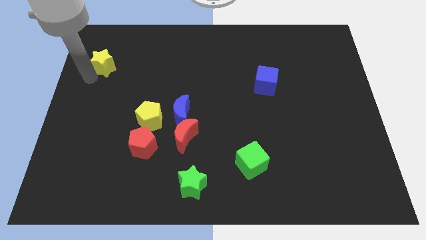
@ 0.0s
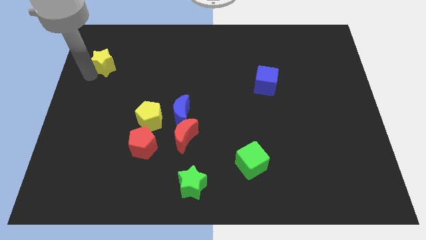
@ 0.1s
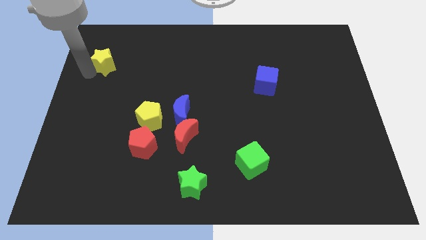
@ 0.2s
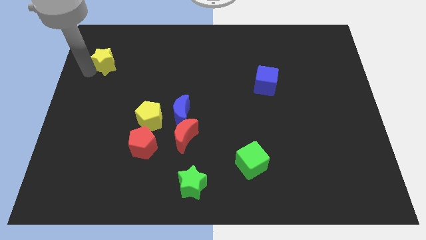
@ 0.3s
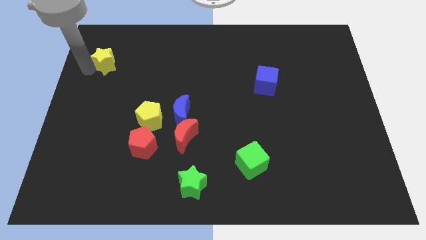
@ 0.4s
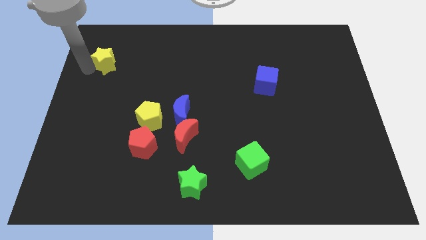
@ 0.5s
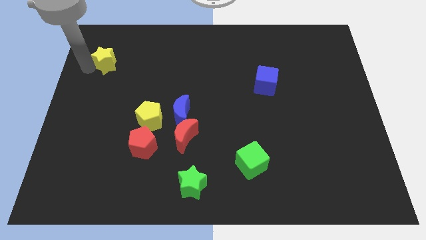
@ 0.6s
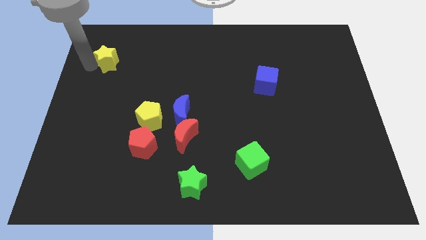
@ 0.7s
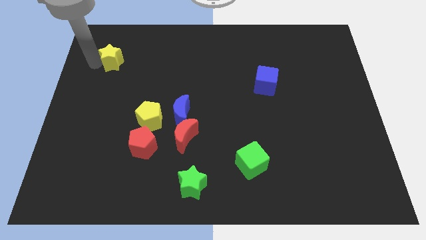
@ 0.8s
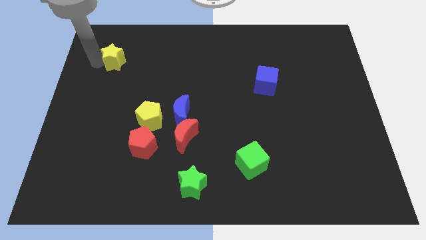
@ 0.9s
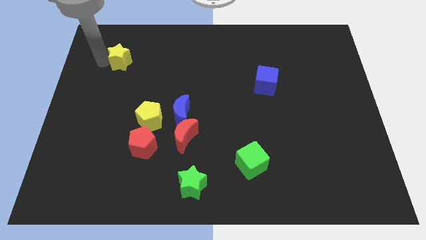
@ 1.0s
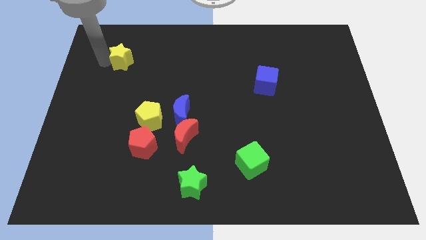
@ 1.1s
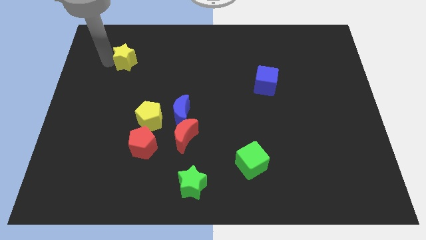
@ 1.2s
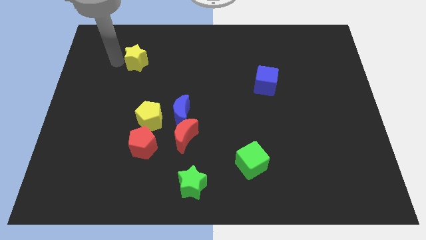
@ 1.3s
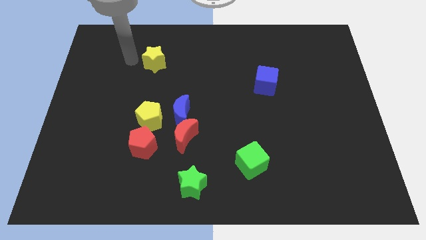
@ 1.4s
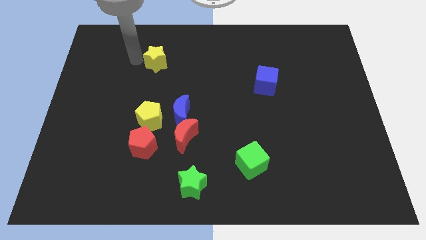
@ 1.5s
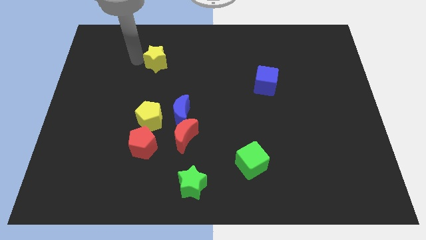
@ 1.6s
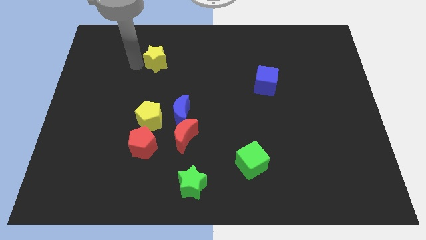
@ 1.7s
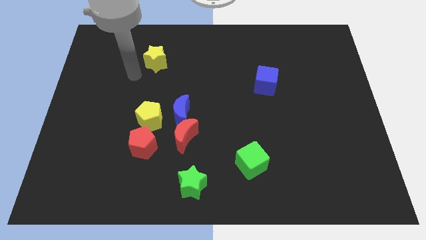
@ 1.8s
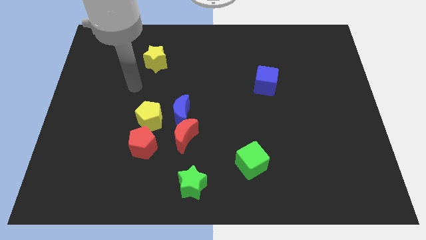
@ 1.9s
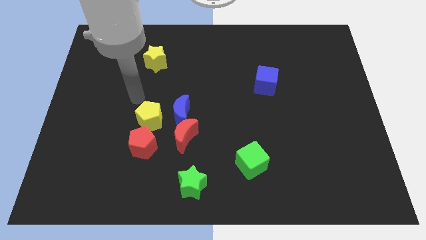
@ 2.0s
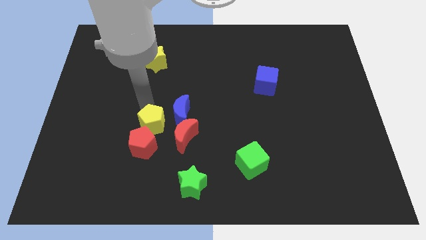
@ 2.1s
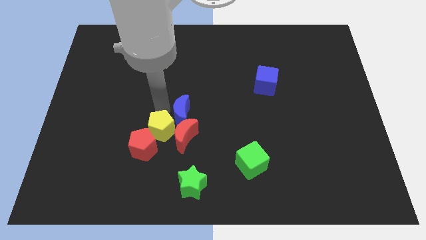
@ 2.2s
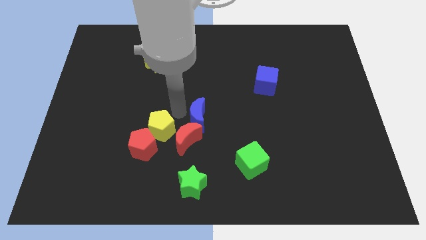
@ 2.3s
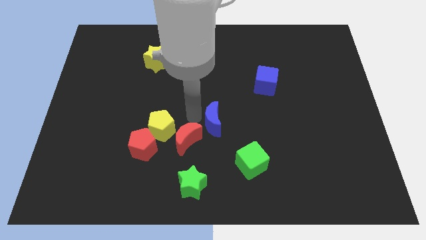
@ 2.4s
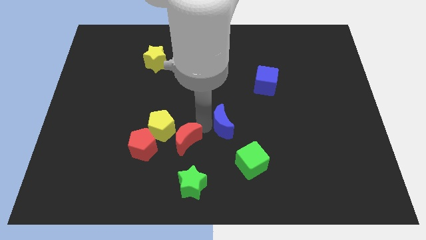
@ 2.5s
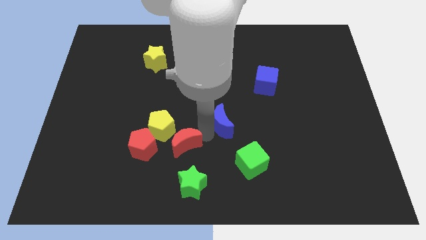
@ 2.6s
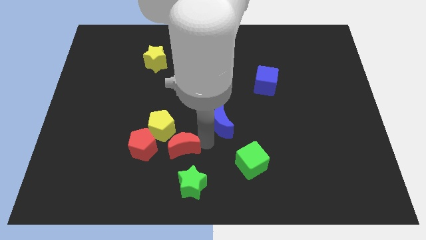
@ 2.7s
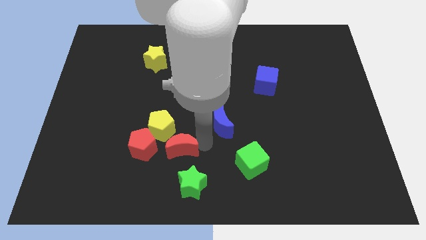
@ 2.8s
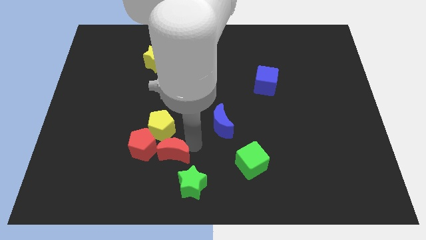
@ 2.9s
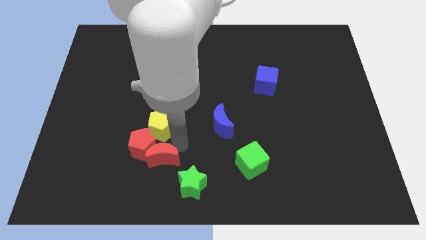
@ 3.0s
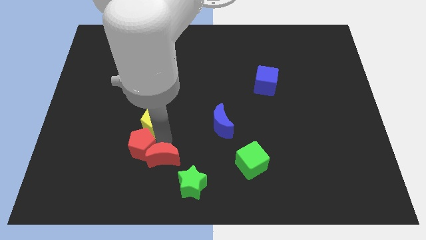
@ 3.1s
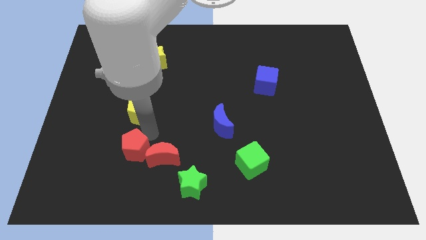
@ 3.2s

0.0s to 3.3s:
place the blue crescent on the top of the green cube

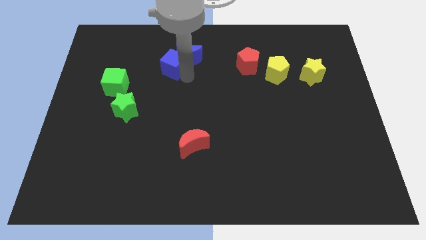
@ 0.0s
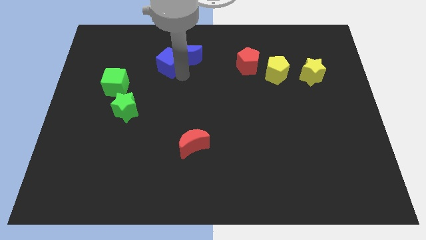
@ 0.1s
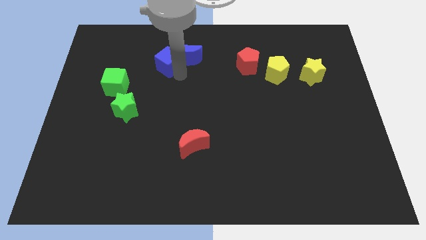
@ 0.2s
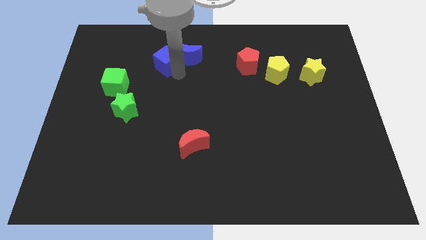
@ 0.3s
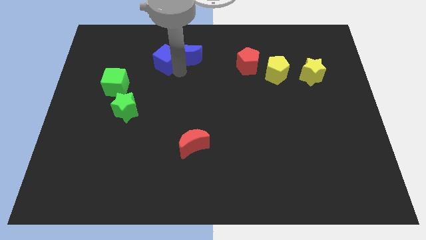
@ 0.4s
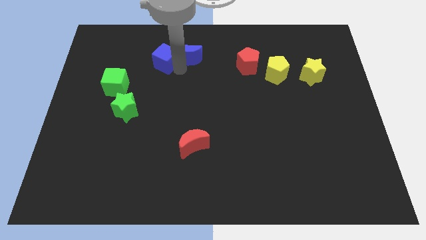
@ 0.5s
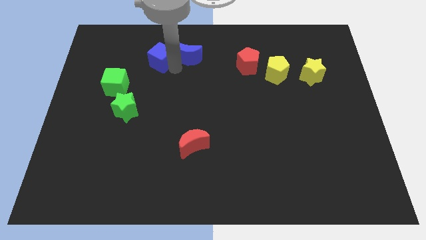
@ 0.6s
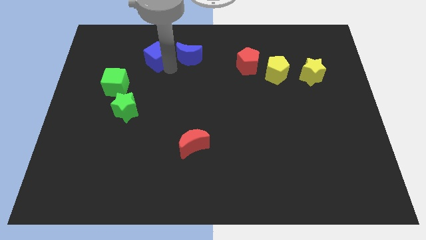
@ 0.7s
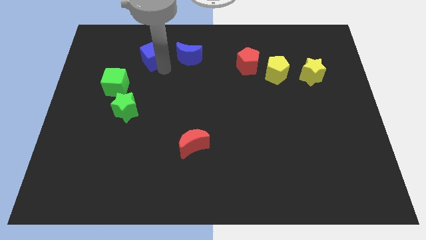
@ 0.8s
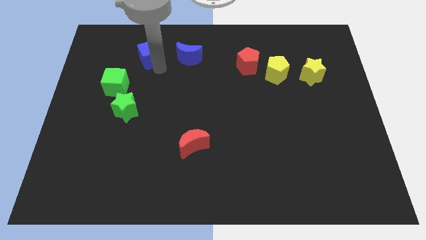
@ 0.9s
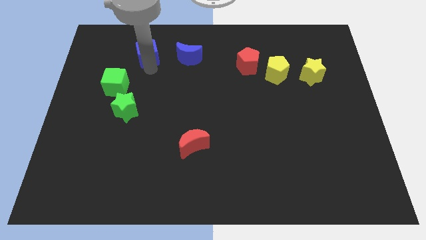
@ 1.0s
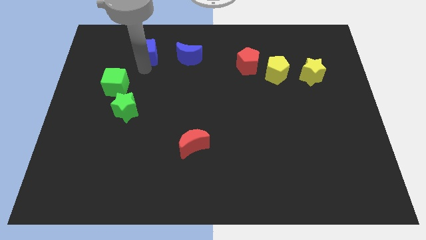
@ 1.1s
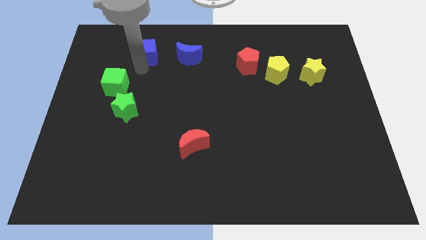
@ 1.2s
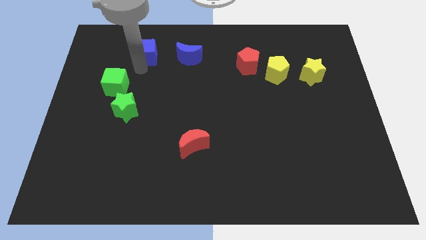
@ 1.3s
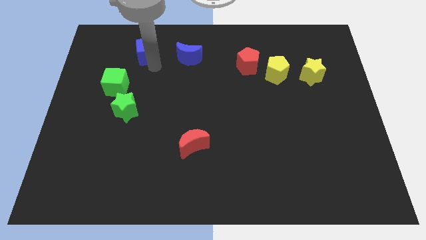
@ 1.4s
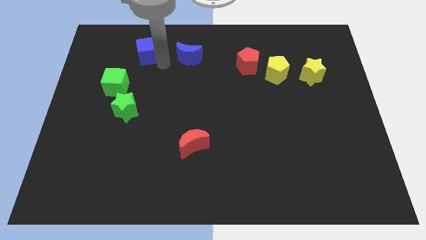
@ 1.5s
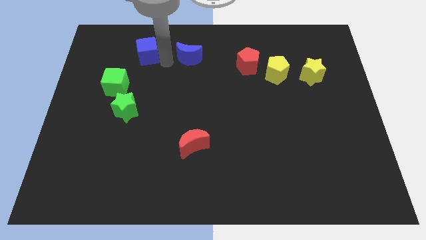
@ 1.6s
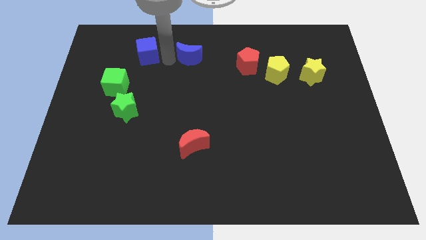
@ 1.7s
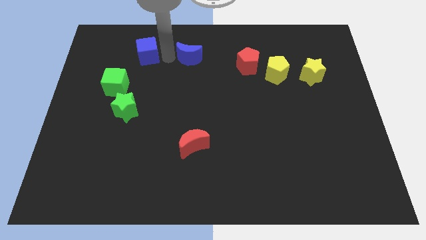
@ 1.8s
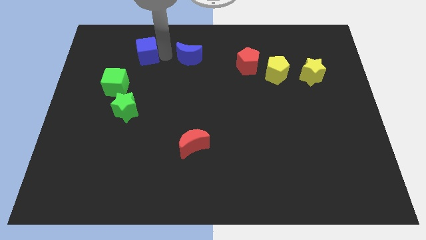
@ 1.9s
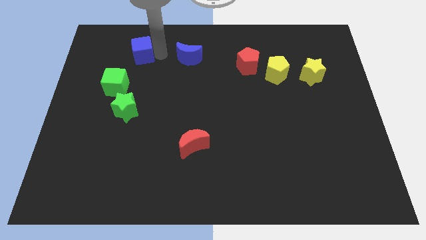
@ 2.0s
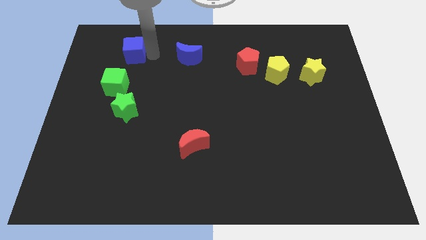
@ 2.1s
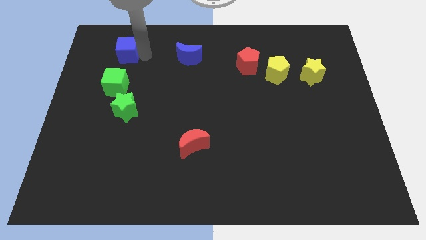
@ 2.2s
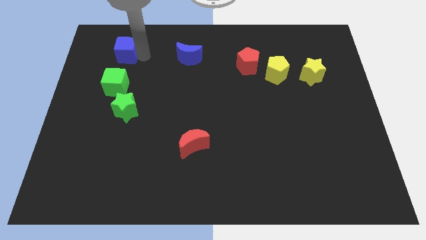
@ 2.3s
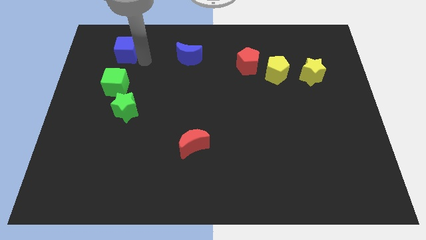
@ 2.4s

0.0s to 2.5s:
move the blue cube left to the blue crescent

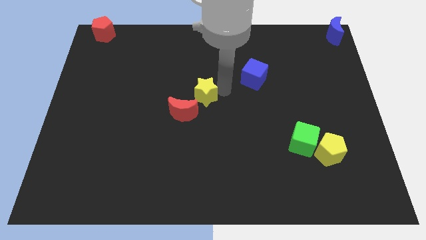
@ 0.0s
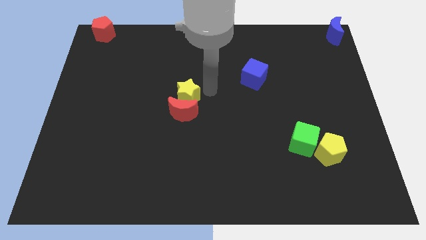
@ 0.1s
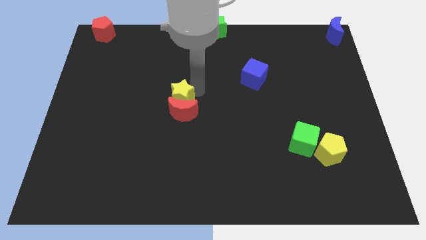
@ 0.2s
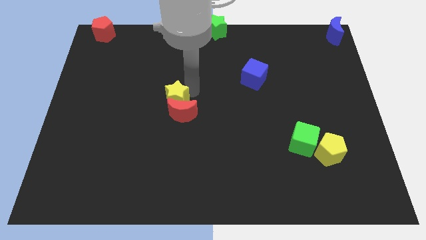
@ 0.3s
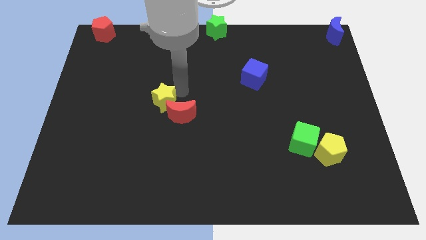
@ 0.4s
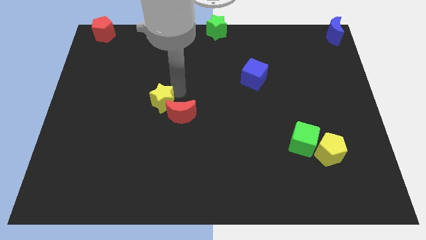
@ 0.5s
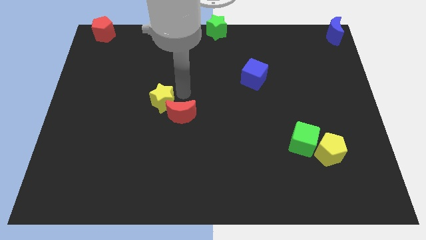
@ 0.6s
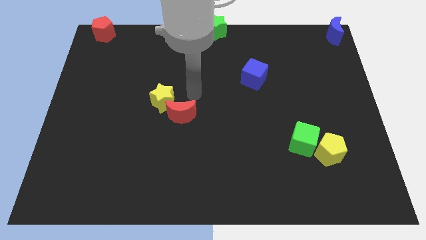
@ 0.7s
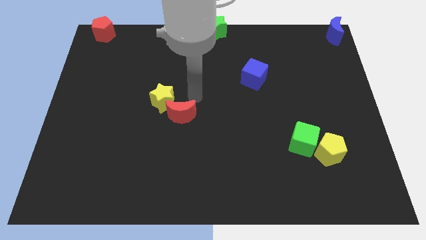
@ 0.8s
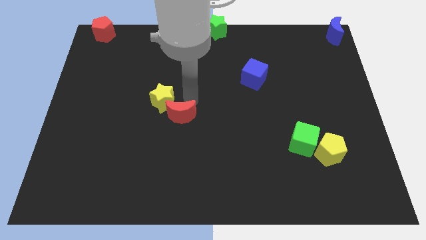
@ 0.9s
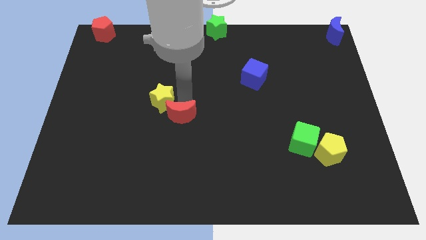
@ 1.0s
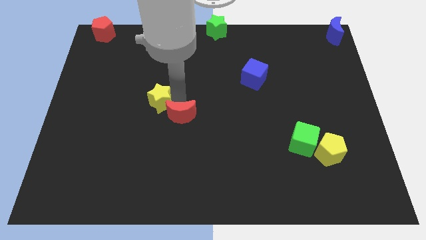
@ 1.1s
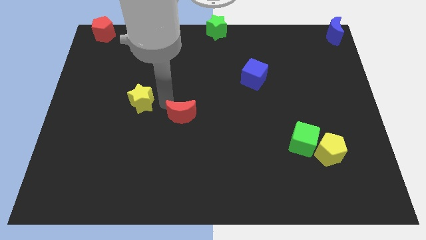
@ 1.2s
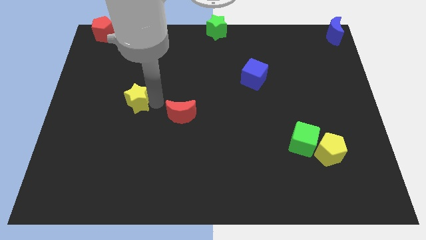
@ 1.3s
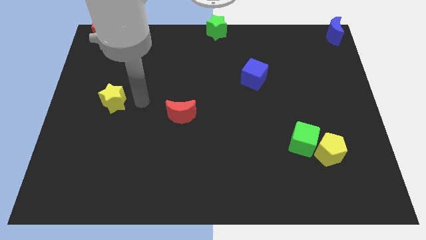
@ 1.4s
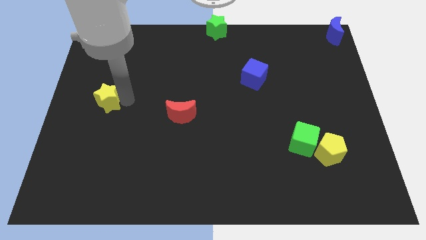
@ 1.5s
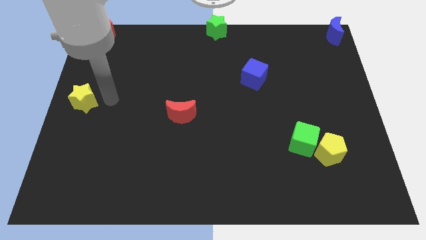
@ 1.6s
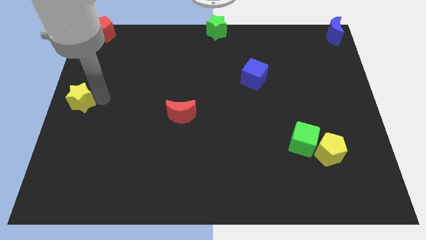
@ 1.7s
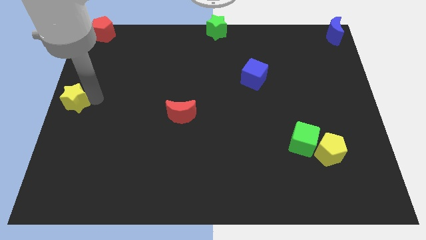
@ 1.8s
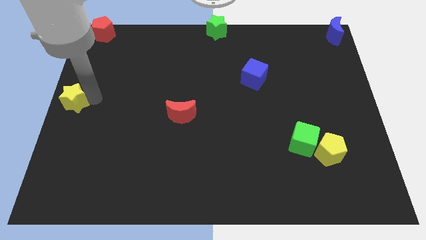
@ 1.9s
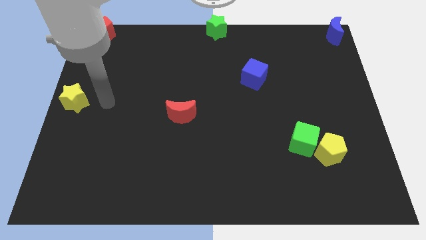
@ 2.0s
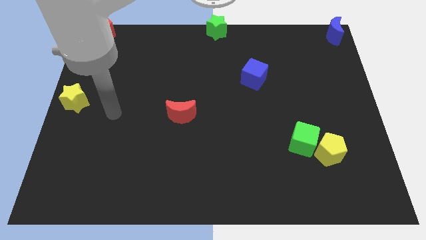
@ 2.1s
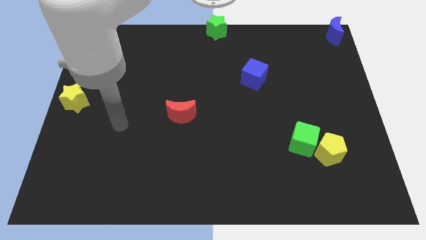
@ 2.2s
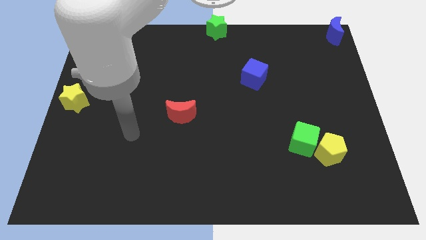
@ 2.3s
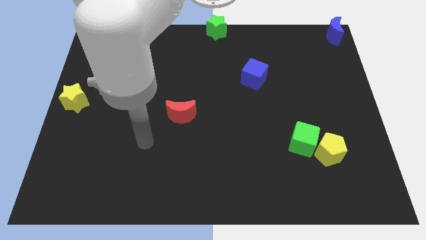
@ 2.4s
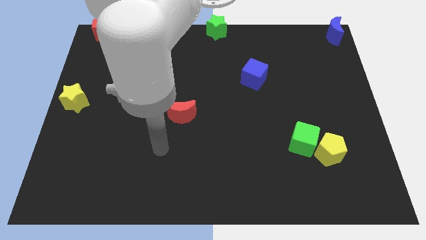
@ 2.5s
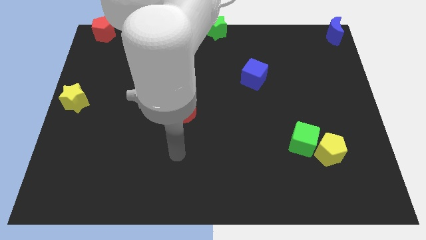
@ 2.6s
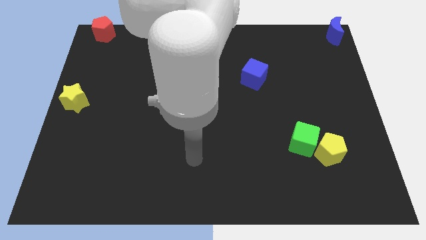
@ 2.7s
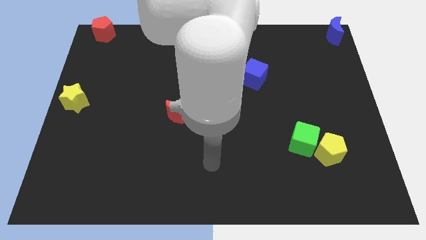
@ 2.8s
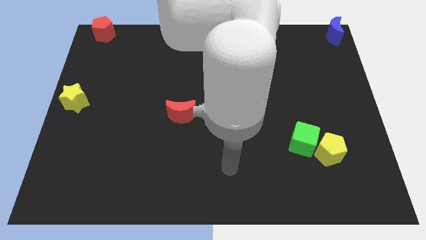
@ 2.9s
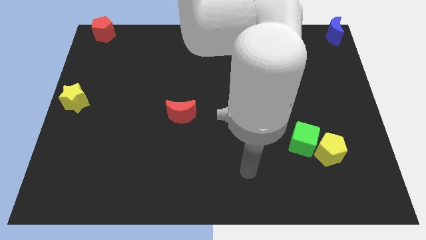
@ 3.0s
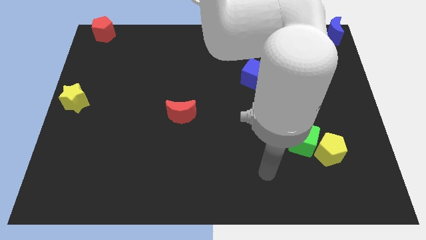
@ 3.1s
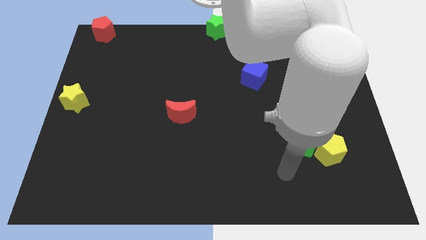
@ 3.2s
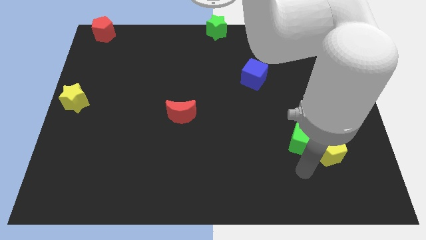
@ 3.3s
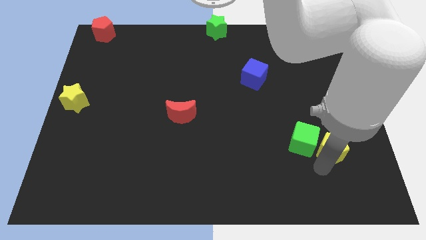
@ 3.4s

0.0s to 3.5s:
put the yellow star to the center left side of the board
